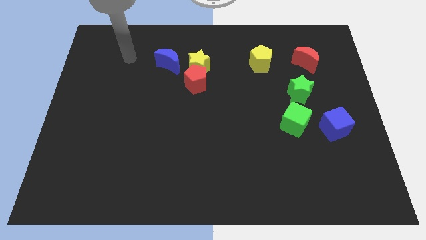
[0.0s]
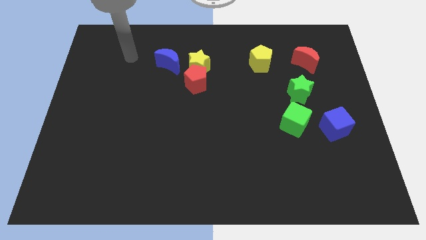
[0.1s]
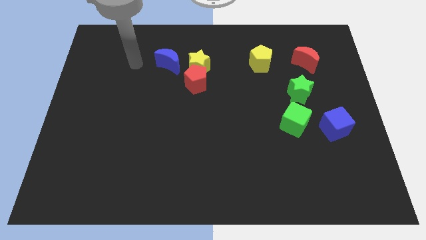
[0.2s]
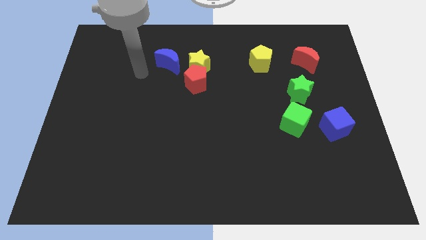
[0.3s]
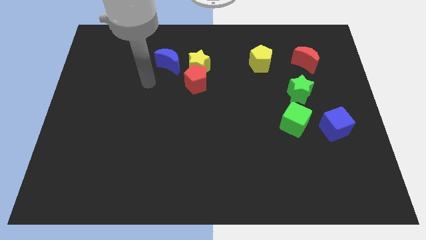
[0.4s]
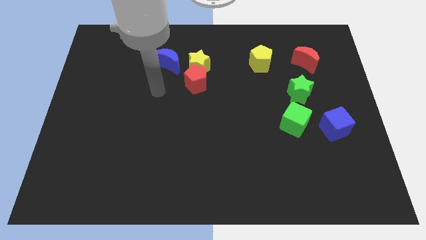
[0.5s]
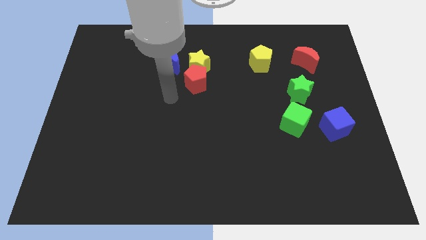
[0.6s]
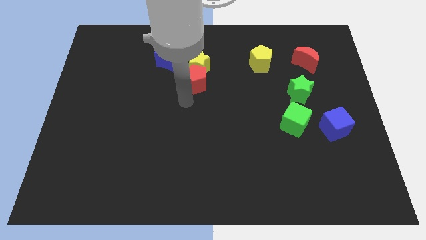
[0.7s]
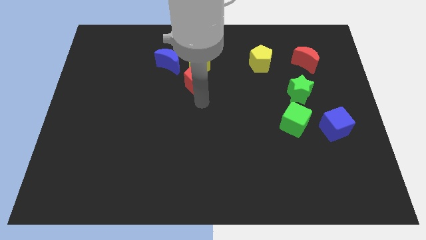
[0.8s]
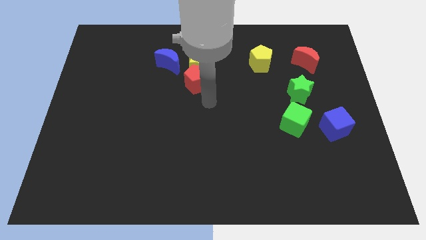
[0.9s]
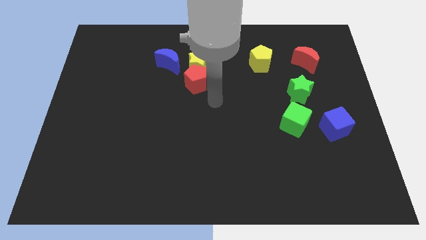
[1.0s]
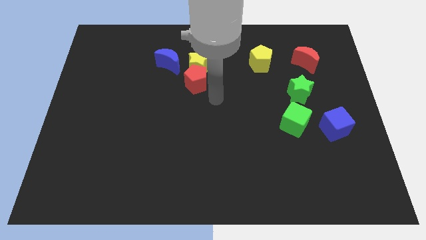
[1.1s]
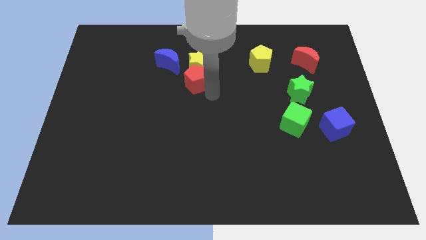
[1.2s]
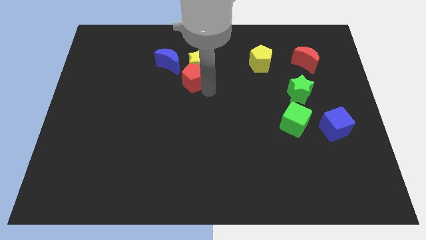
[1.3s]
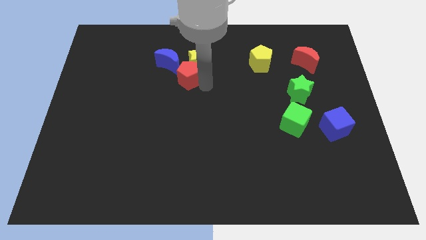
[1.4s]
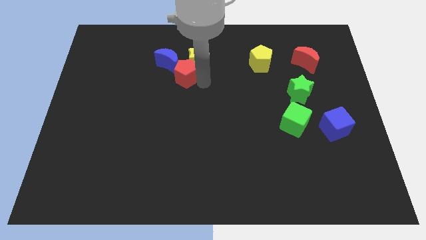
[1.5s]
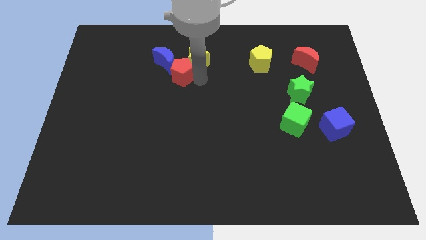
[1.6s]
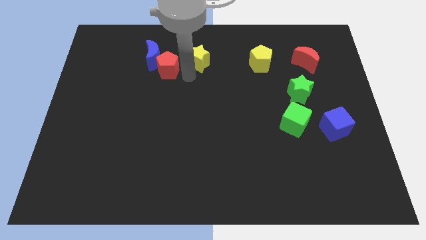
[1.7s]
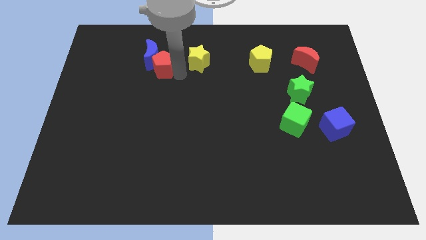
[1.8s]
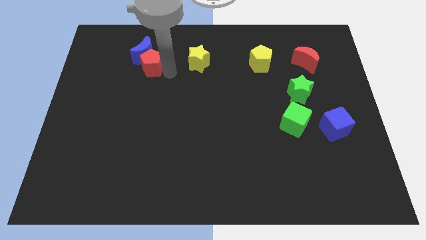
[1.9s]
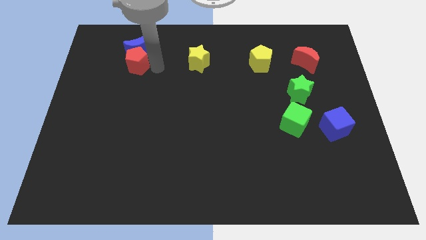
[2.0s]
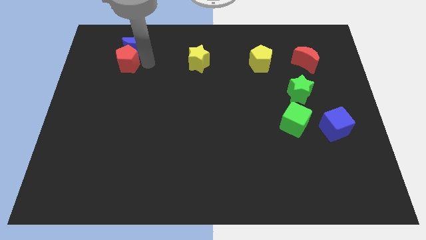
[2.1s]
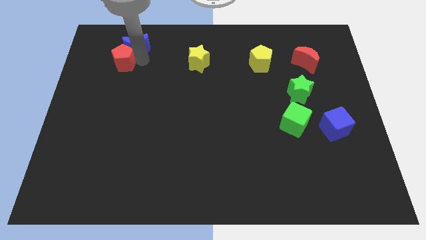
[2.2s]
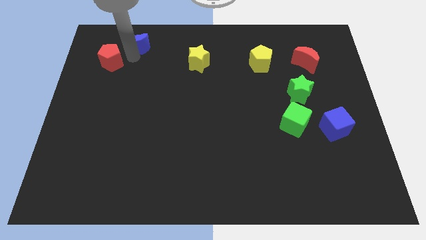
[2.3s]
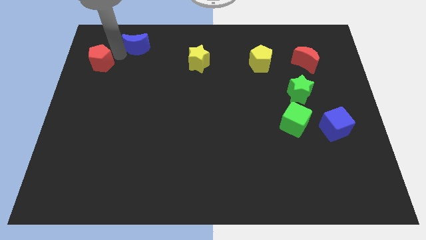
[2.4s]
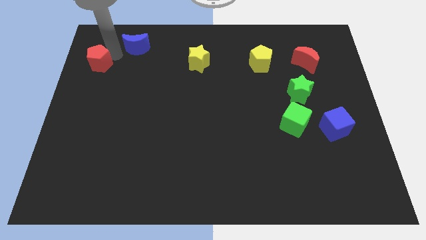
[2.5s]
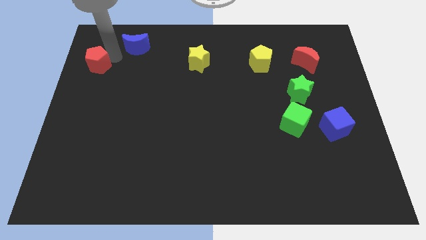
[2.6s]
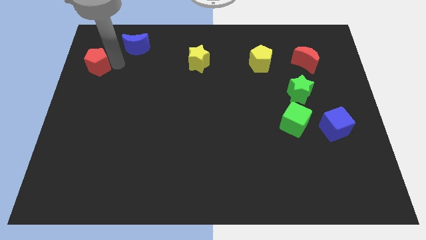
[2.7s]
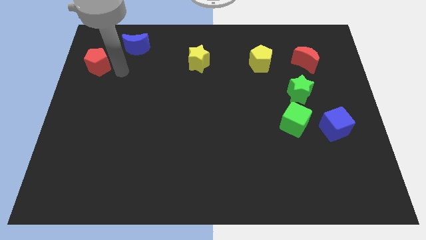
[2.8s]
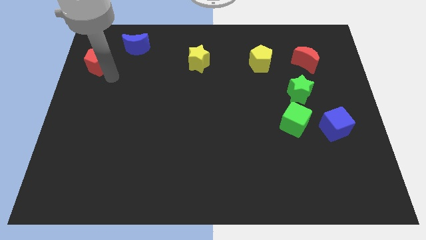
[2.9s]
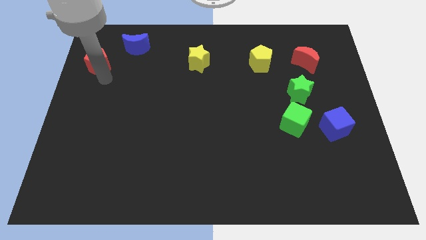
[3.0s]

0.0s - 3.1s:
separate red pentagon from yellow star

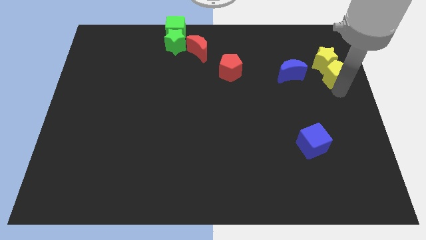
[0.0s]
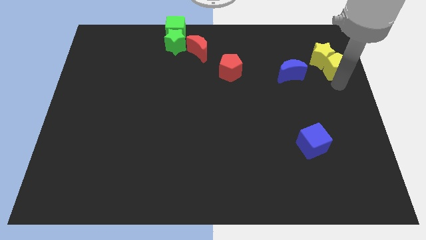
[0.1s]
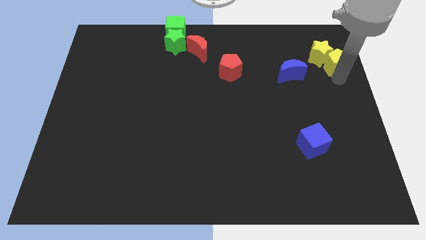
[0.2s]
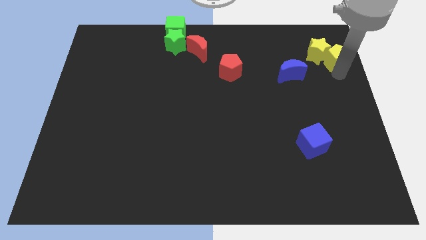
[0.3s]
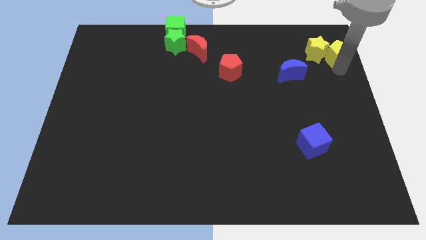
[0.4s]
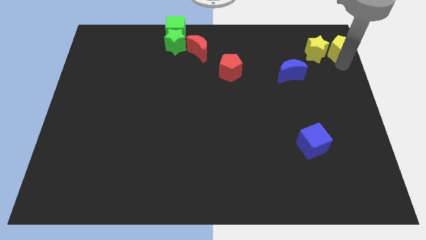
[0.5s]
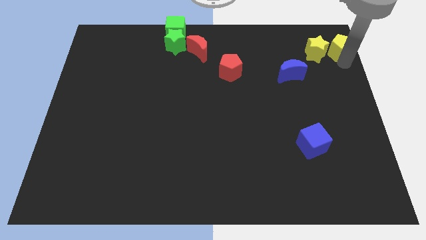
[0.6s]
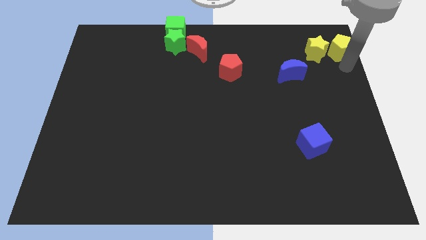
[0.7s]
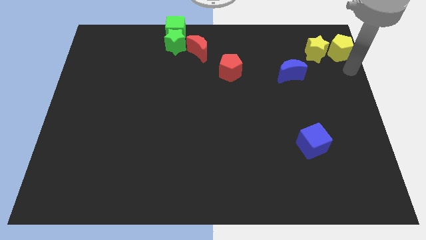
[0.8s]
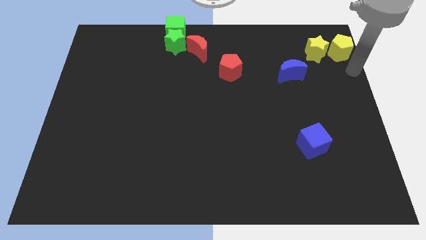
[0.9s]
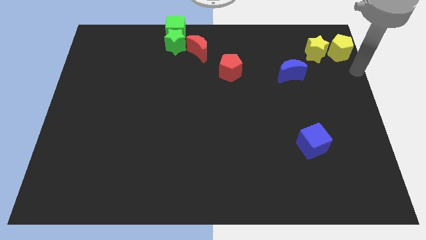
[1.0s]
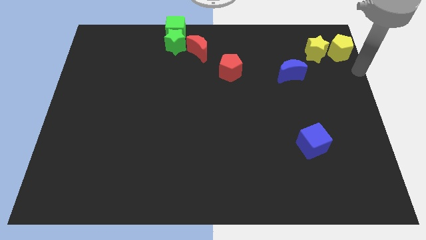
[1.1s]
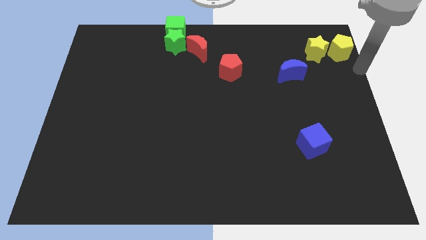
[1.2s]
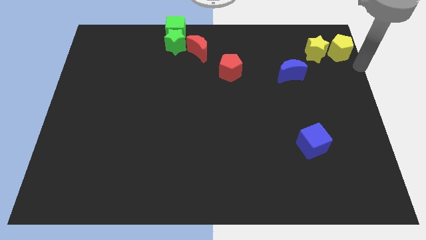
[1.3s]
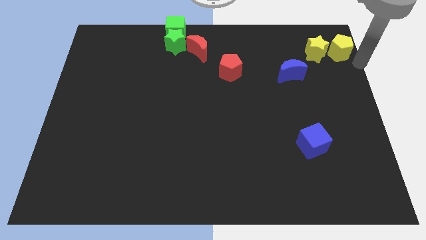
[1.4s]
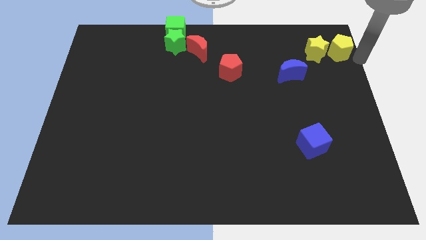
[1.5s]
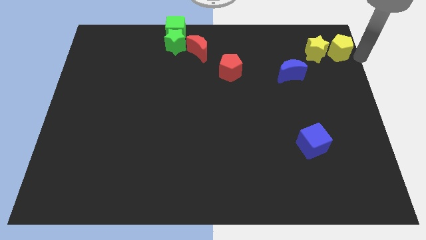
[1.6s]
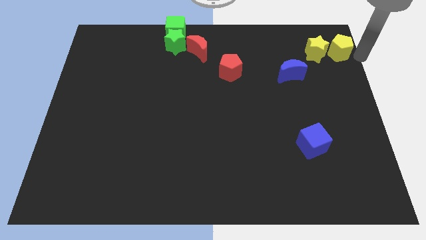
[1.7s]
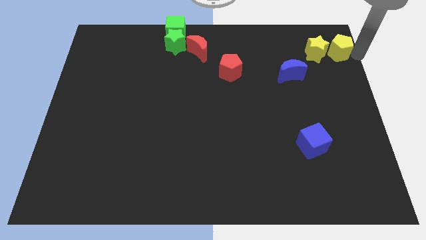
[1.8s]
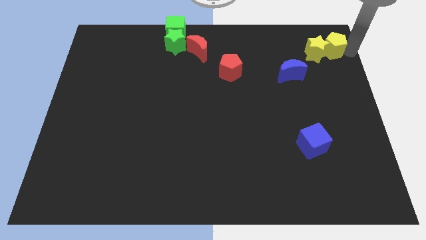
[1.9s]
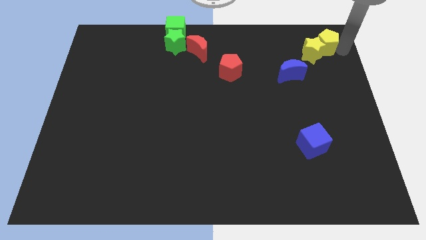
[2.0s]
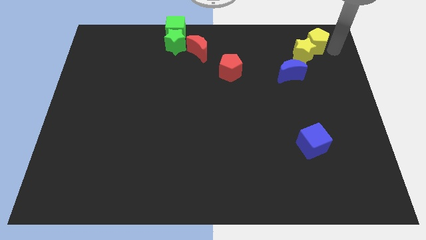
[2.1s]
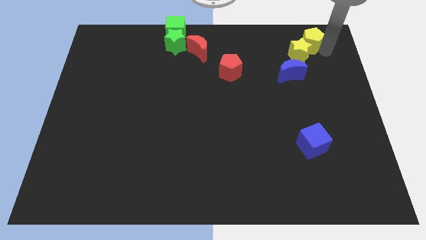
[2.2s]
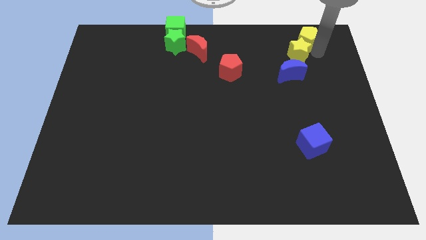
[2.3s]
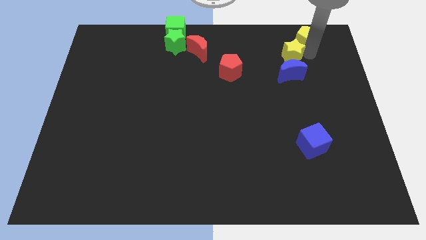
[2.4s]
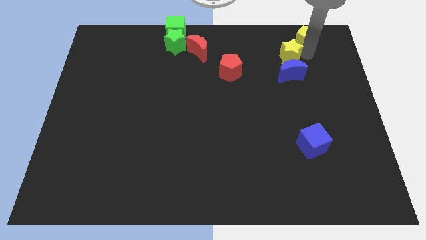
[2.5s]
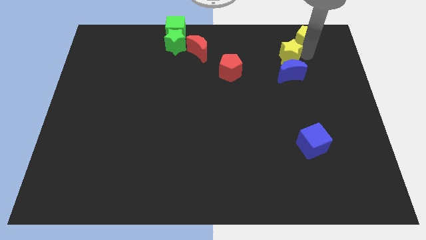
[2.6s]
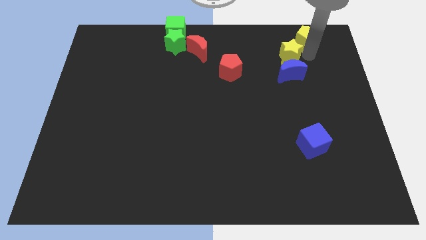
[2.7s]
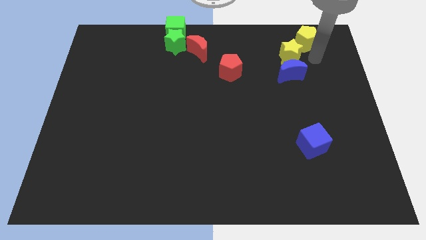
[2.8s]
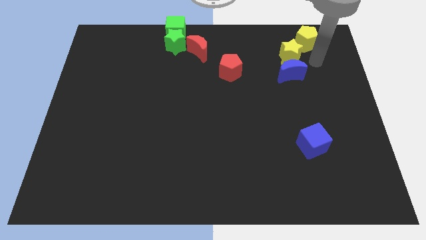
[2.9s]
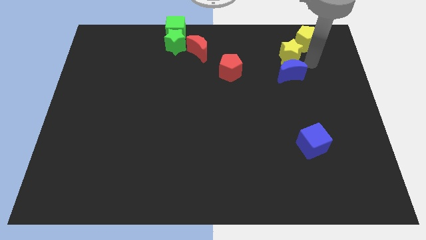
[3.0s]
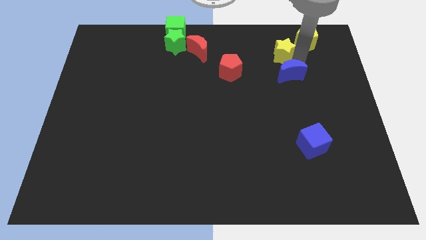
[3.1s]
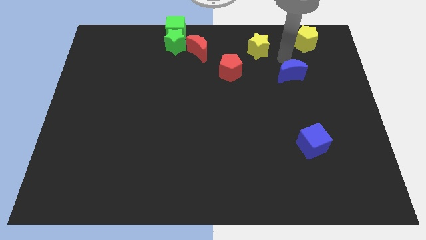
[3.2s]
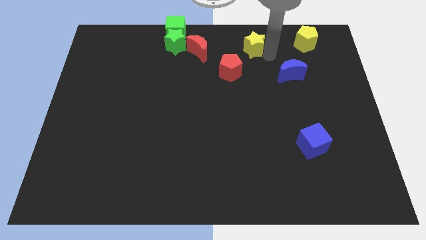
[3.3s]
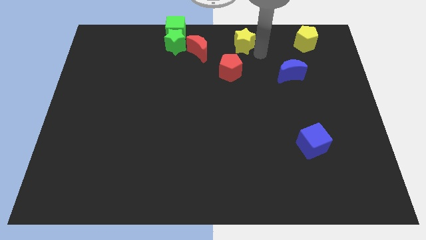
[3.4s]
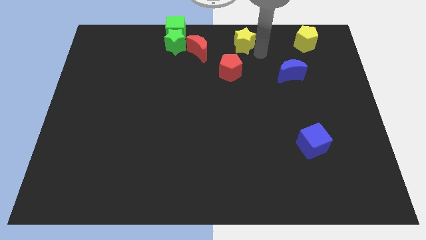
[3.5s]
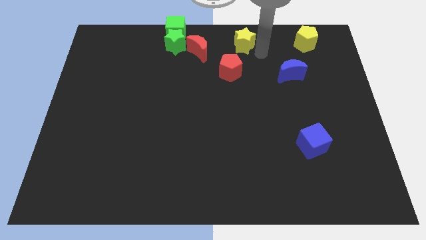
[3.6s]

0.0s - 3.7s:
move yellow star to the top right of the red pentagon

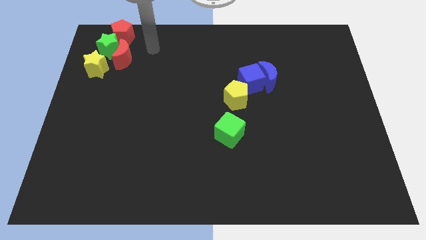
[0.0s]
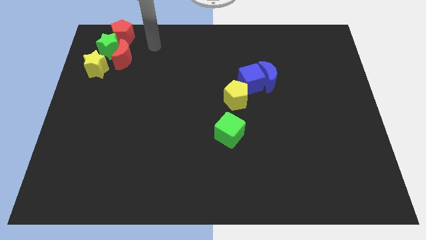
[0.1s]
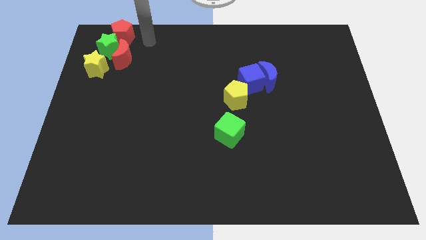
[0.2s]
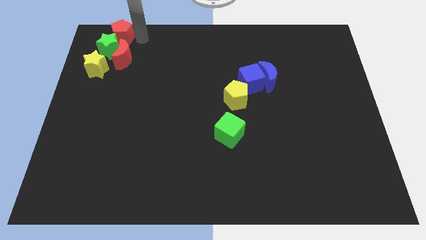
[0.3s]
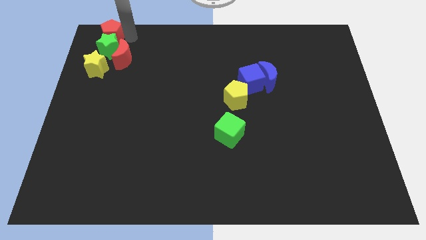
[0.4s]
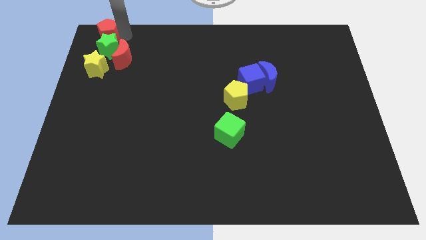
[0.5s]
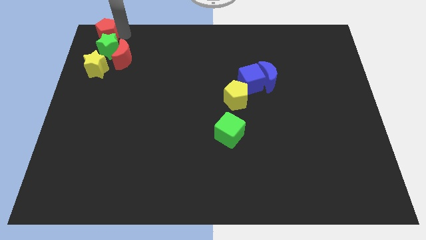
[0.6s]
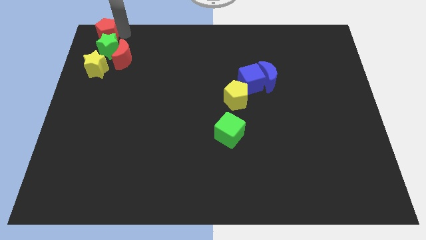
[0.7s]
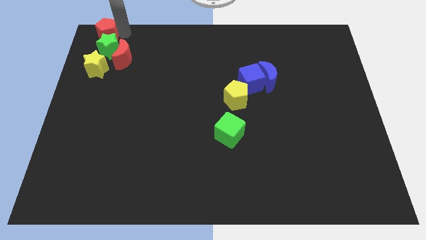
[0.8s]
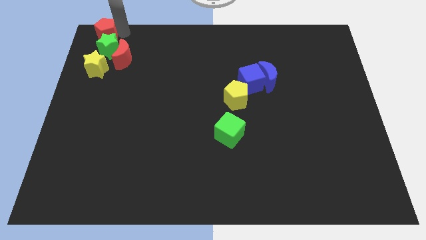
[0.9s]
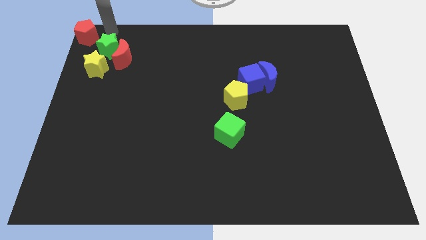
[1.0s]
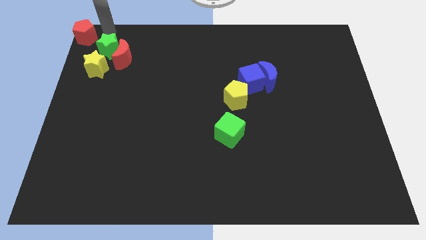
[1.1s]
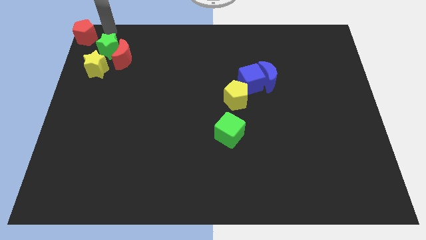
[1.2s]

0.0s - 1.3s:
drag the red pentagon to the top left

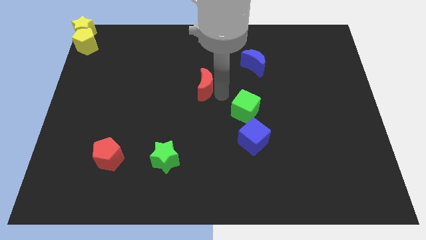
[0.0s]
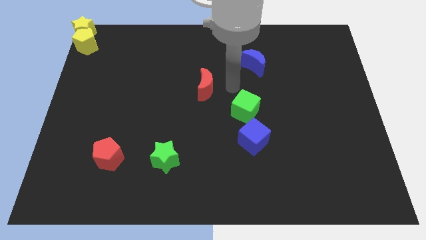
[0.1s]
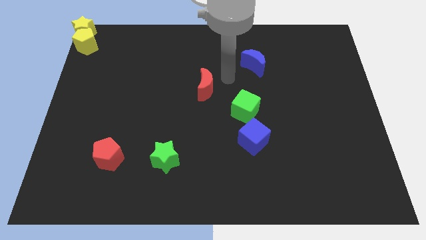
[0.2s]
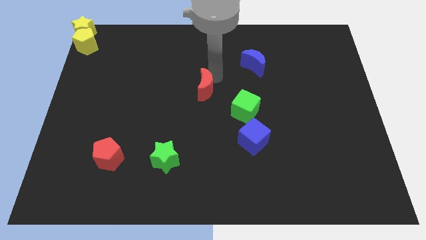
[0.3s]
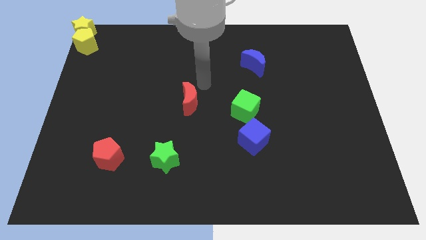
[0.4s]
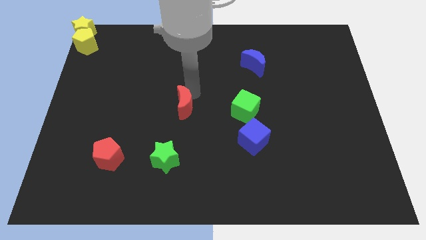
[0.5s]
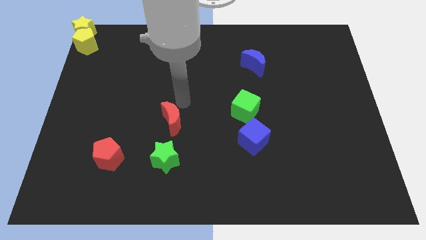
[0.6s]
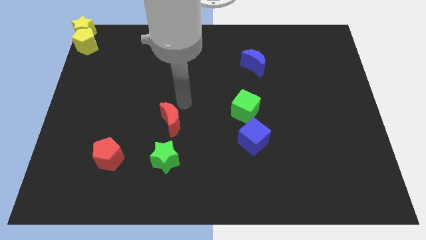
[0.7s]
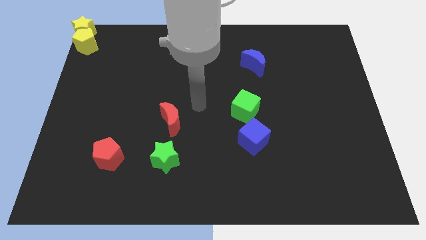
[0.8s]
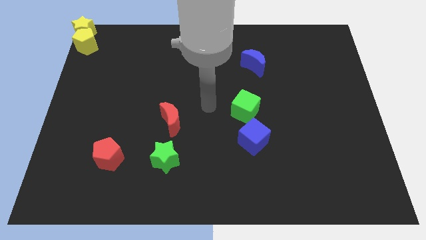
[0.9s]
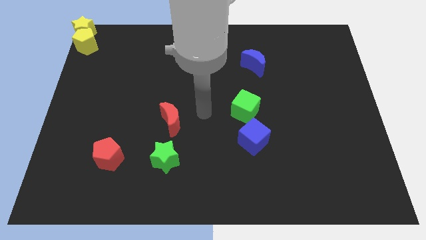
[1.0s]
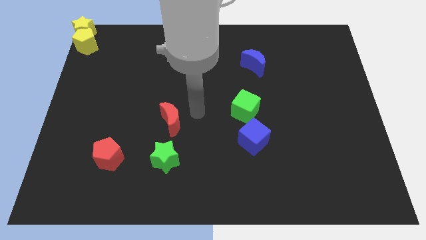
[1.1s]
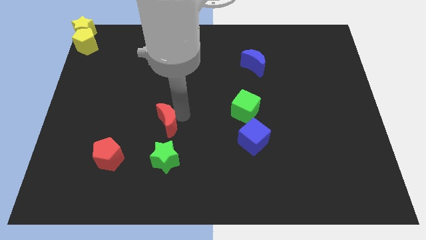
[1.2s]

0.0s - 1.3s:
place the red crescent at the top of the green star
